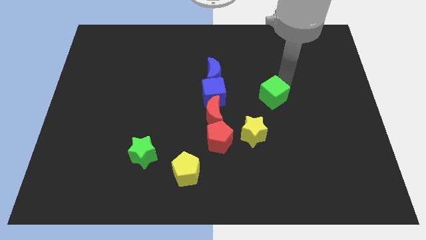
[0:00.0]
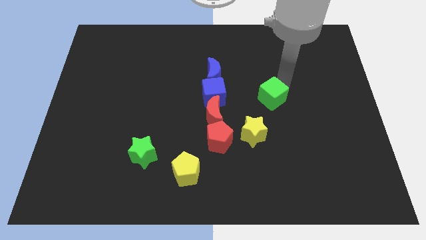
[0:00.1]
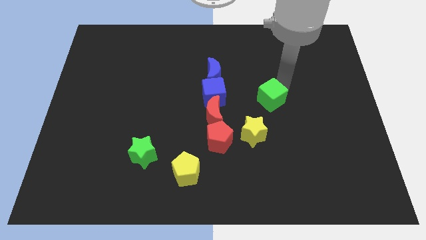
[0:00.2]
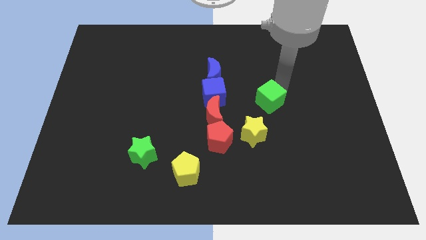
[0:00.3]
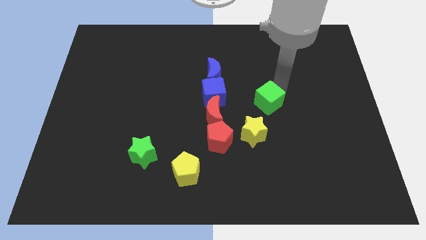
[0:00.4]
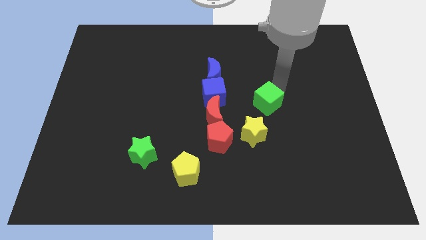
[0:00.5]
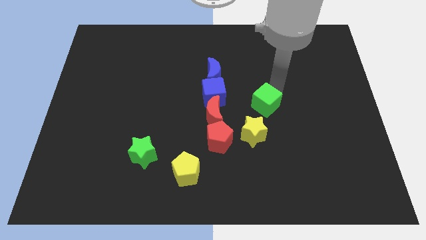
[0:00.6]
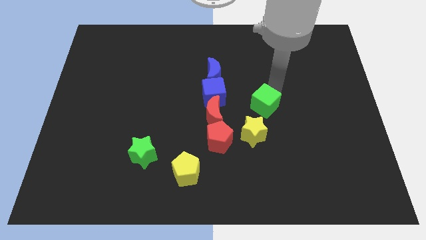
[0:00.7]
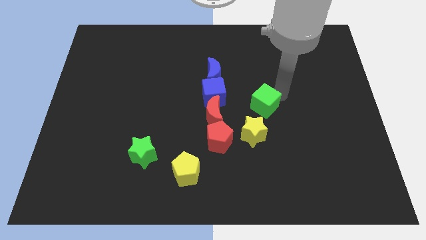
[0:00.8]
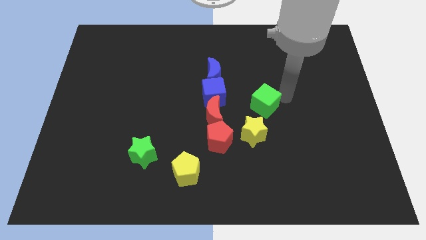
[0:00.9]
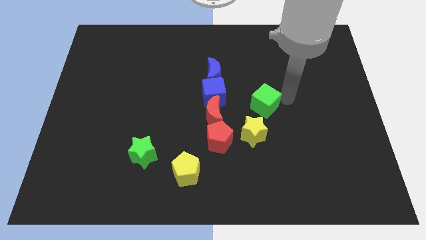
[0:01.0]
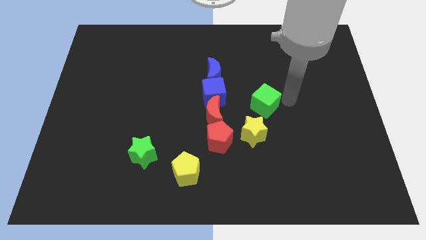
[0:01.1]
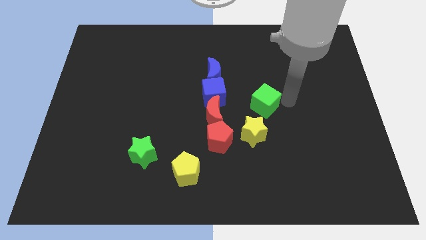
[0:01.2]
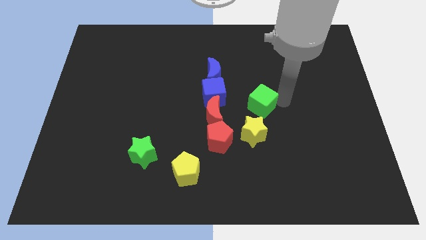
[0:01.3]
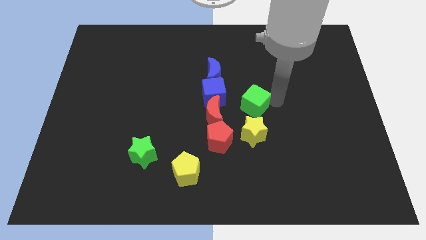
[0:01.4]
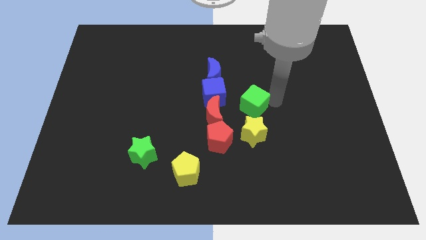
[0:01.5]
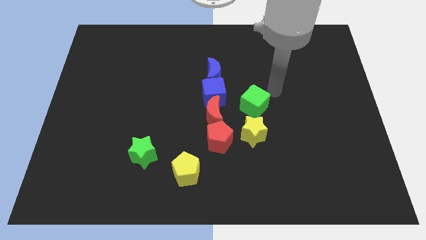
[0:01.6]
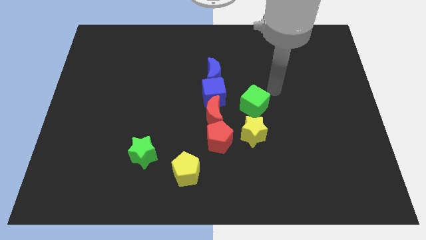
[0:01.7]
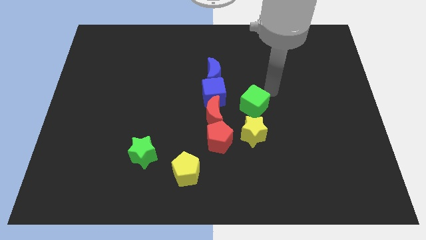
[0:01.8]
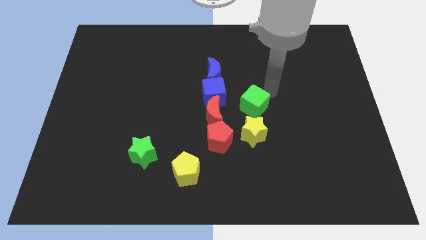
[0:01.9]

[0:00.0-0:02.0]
put the green cube above the yellow star

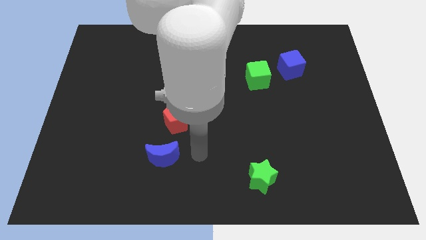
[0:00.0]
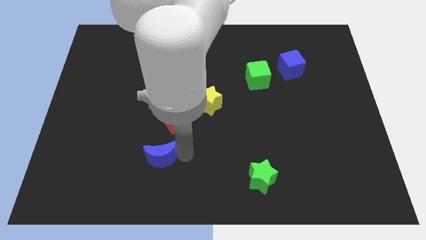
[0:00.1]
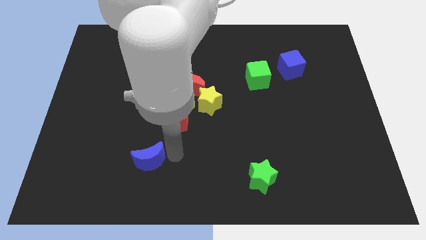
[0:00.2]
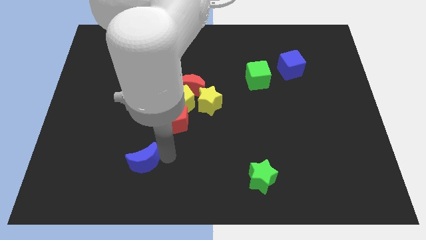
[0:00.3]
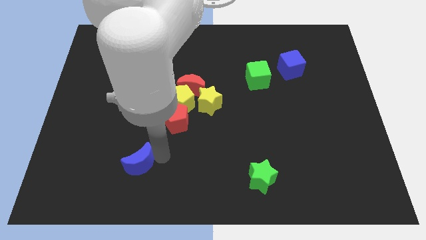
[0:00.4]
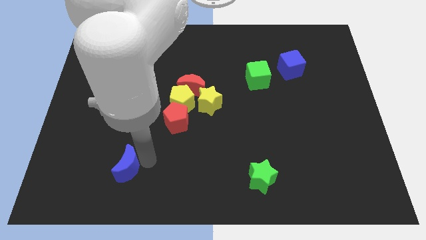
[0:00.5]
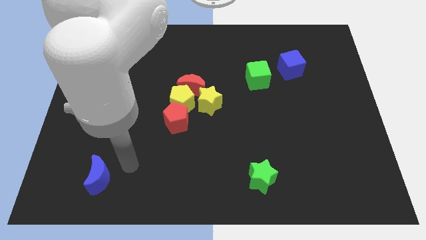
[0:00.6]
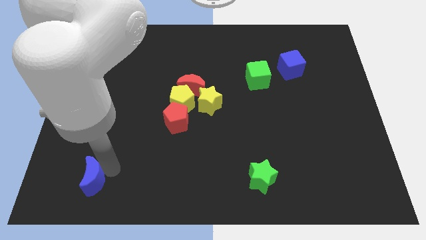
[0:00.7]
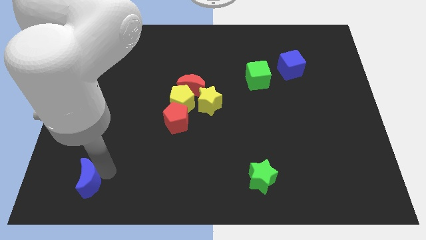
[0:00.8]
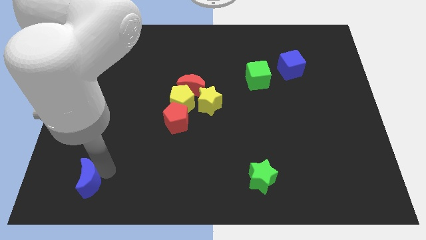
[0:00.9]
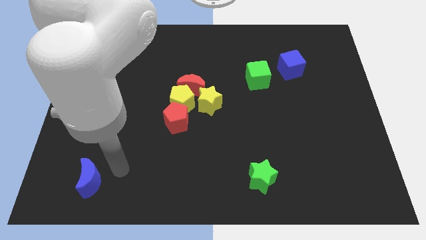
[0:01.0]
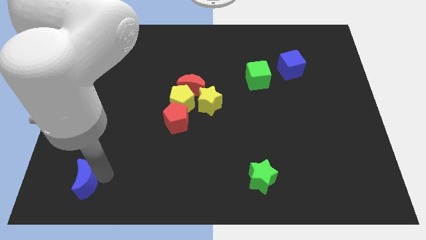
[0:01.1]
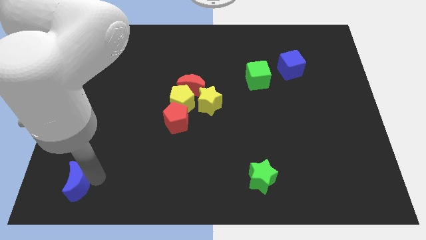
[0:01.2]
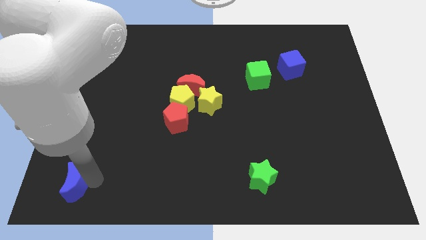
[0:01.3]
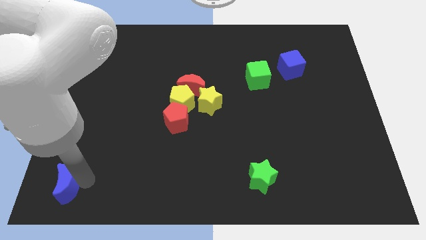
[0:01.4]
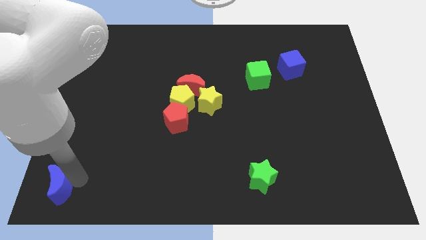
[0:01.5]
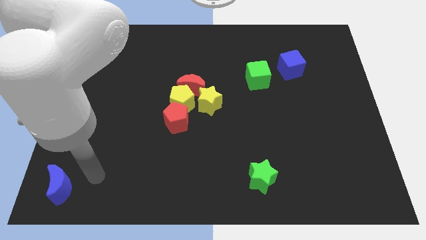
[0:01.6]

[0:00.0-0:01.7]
push the blue crescente towards the bottom left corner of the board

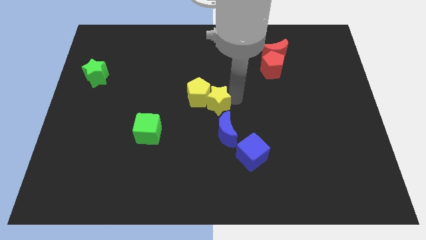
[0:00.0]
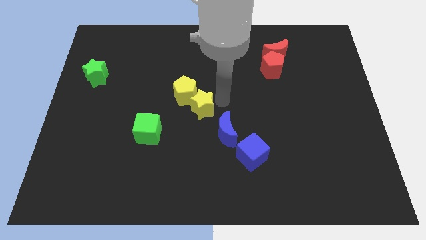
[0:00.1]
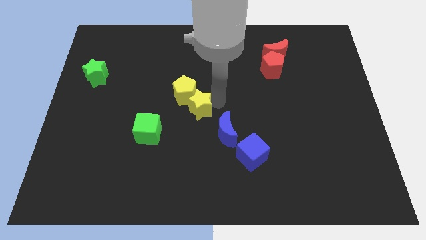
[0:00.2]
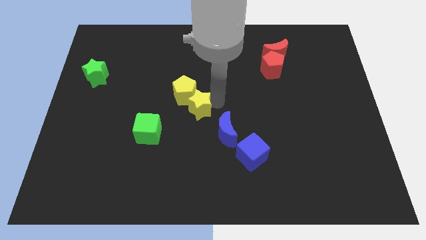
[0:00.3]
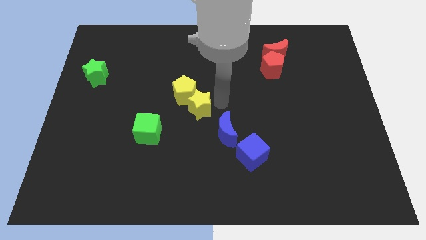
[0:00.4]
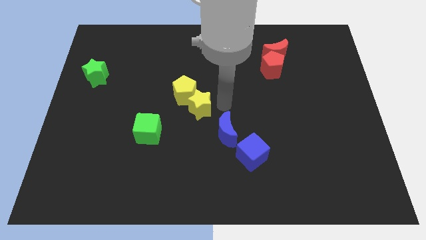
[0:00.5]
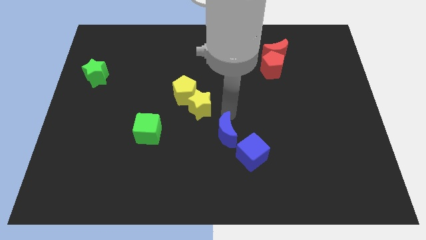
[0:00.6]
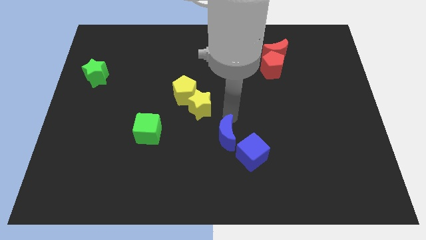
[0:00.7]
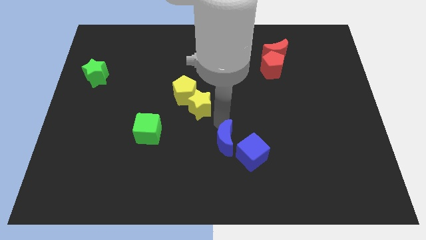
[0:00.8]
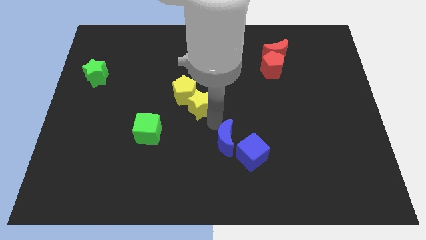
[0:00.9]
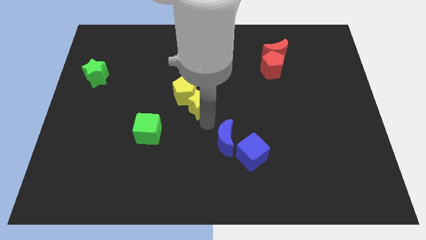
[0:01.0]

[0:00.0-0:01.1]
separate blue moon and yellow blocks

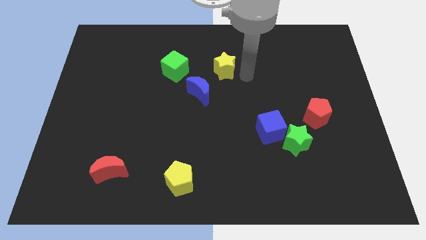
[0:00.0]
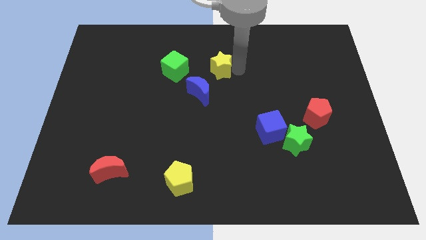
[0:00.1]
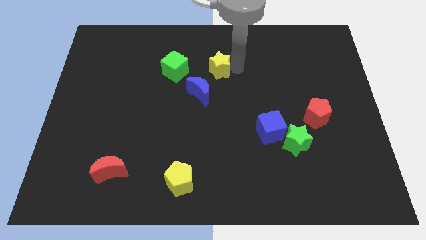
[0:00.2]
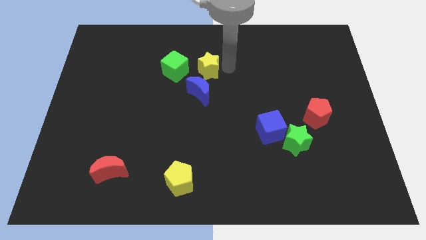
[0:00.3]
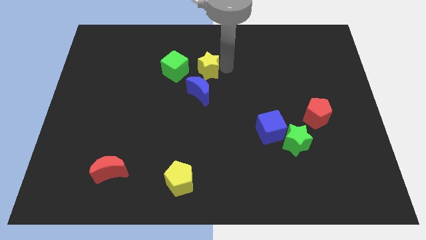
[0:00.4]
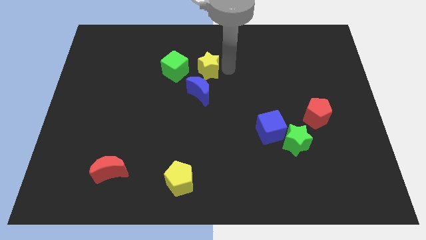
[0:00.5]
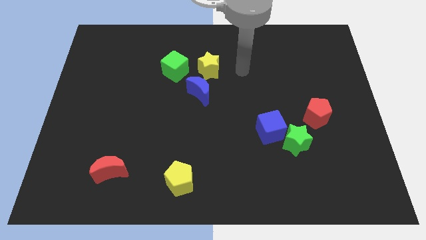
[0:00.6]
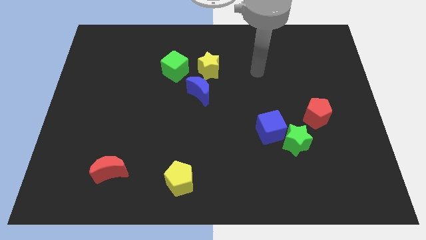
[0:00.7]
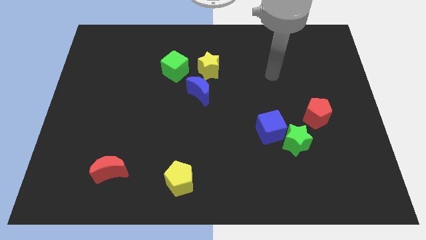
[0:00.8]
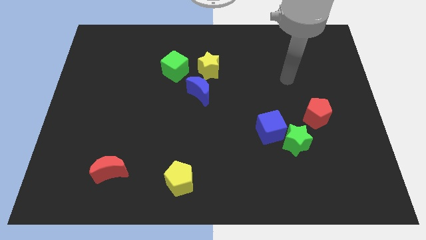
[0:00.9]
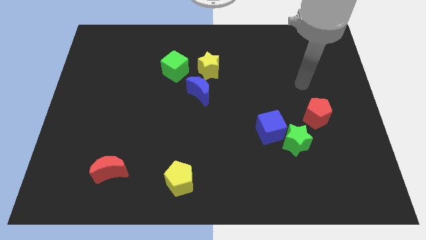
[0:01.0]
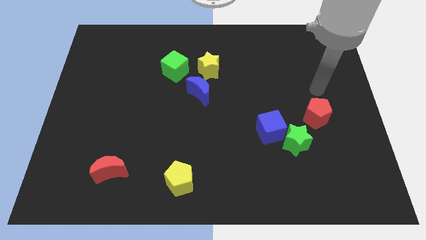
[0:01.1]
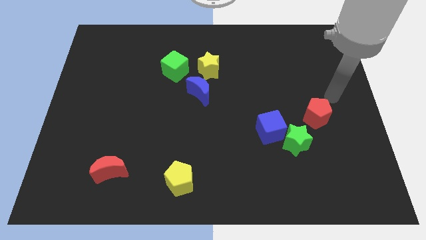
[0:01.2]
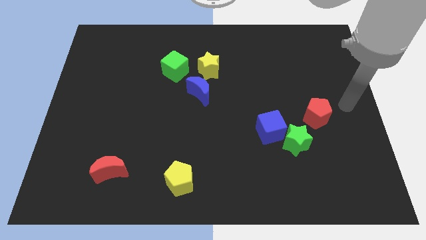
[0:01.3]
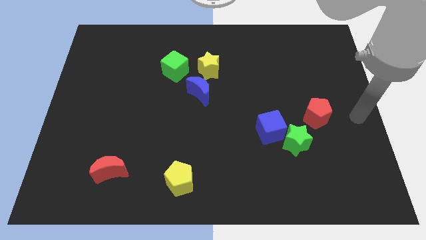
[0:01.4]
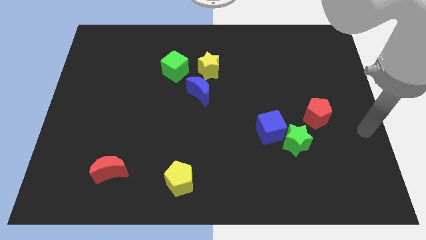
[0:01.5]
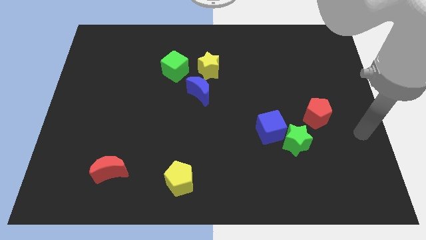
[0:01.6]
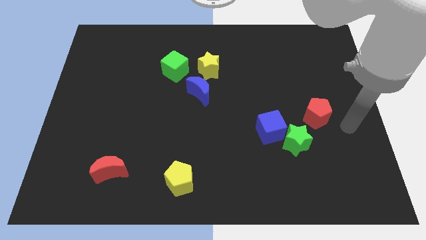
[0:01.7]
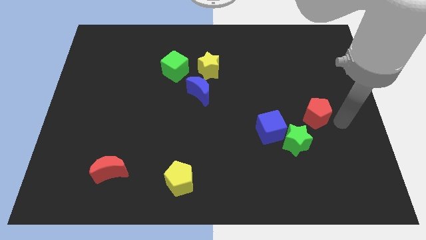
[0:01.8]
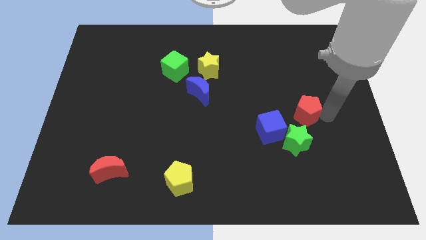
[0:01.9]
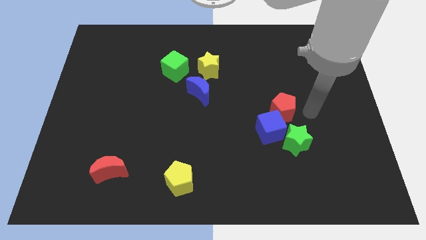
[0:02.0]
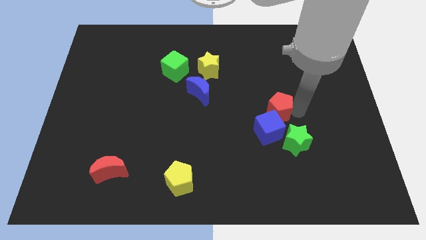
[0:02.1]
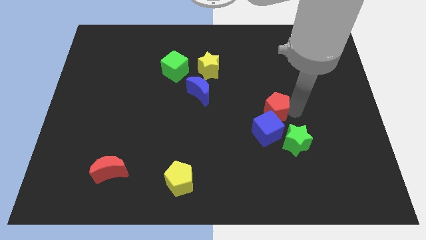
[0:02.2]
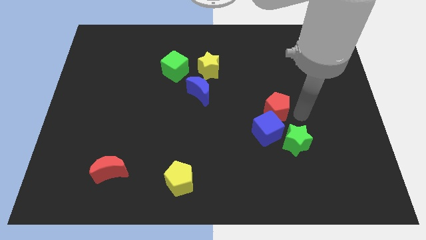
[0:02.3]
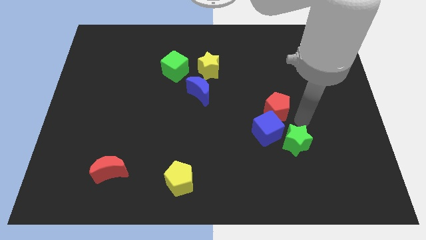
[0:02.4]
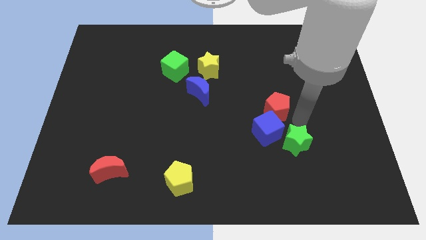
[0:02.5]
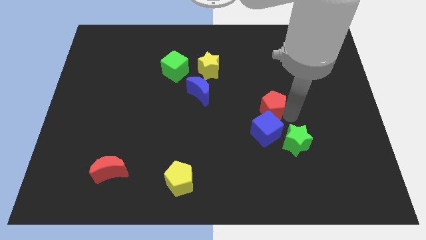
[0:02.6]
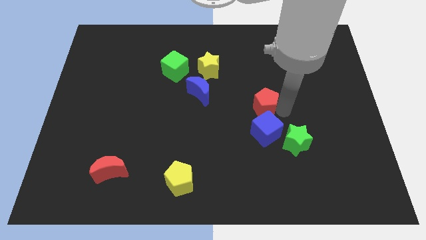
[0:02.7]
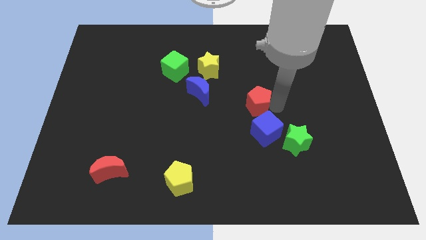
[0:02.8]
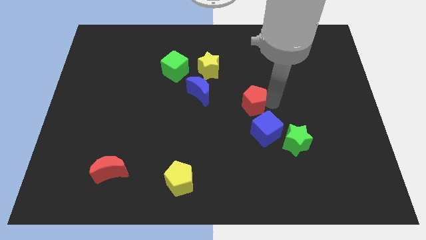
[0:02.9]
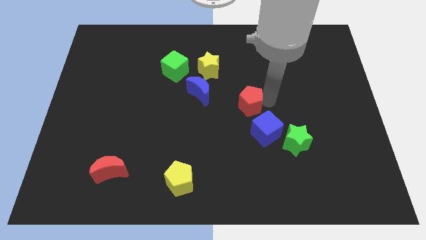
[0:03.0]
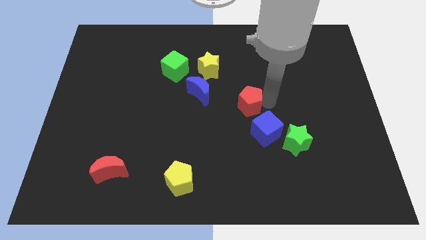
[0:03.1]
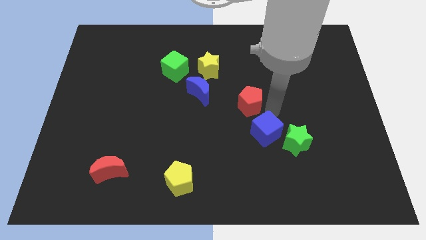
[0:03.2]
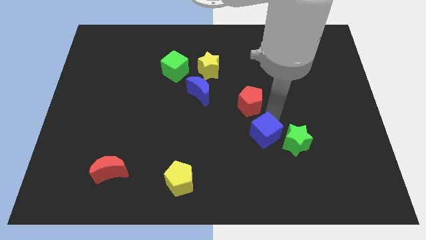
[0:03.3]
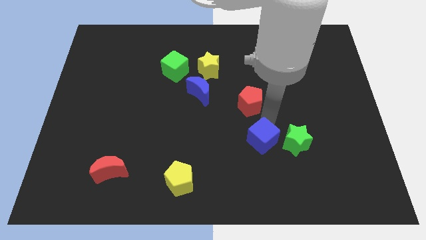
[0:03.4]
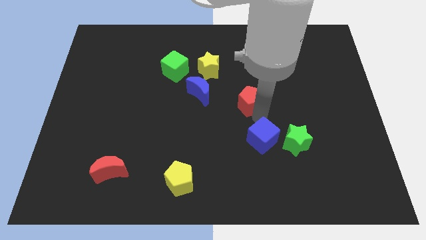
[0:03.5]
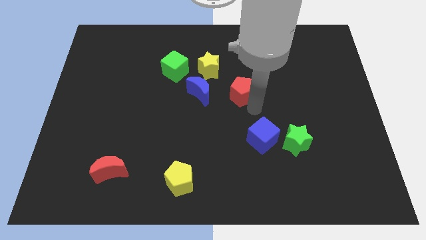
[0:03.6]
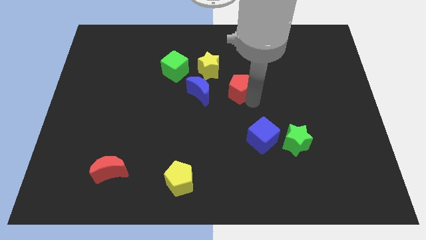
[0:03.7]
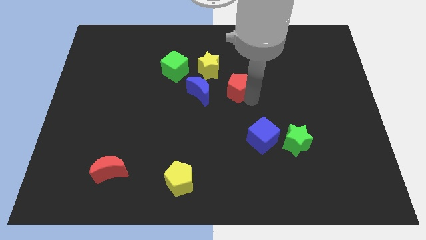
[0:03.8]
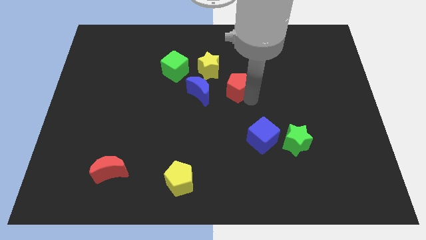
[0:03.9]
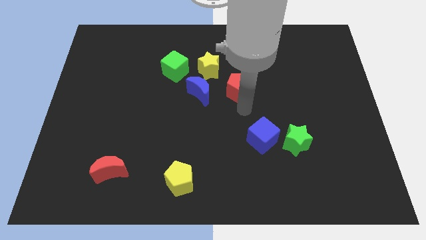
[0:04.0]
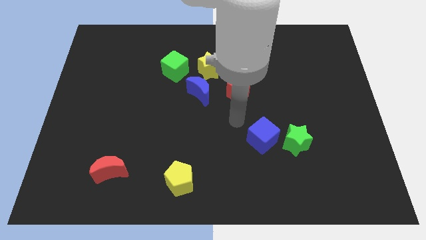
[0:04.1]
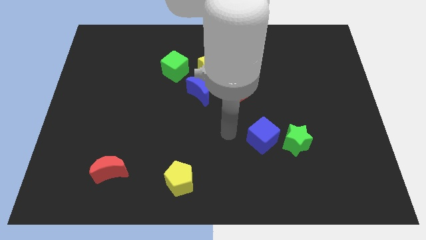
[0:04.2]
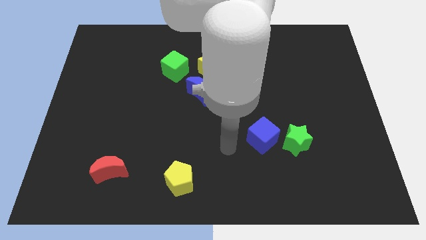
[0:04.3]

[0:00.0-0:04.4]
push the red pentagon to the bottom right of the yellow star
